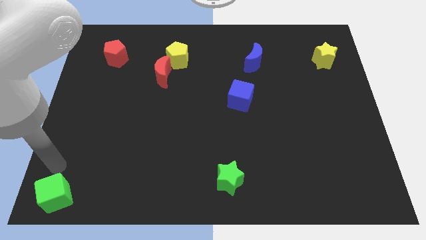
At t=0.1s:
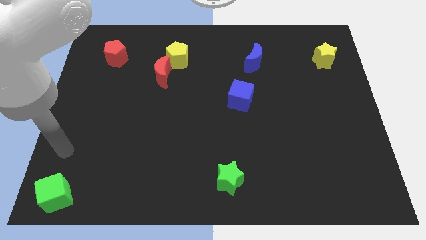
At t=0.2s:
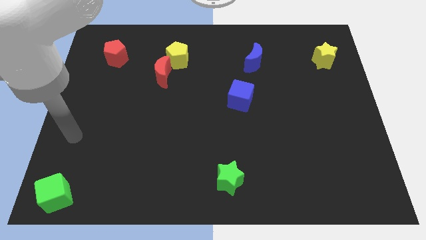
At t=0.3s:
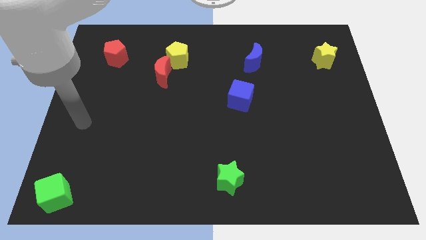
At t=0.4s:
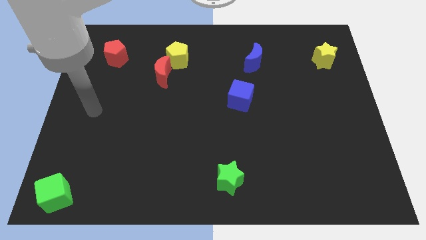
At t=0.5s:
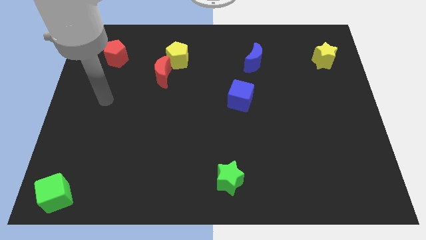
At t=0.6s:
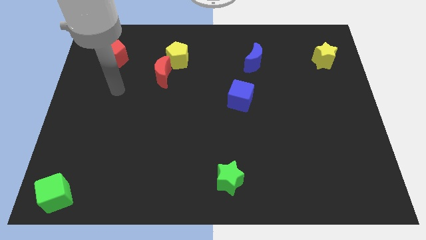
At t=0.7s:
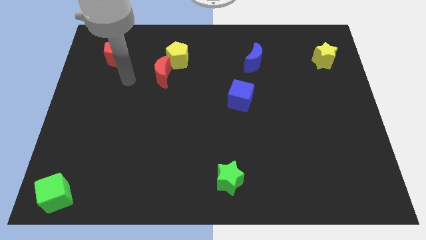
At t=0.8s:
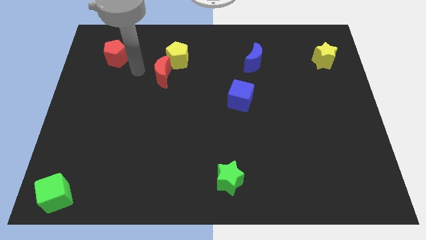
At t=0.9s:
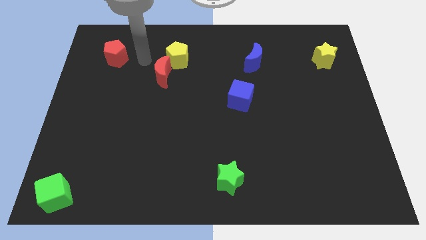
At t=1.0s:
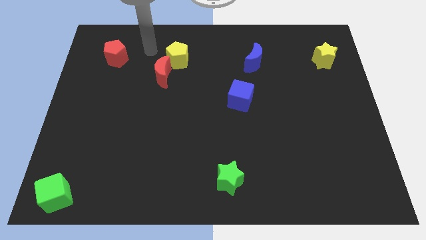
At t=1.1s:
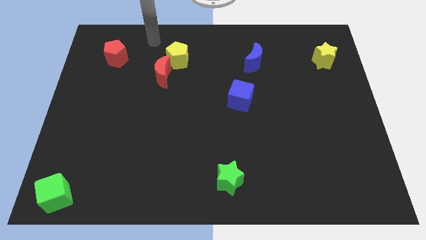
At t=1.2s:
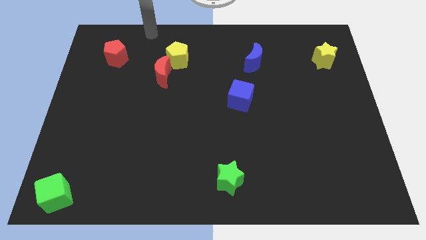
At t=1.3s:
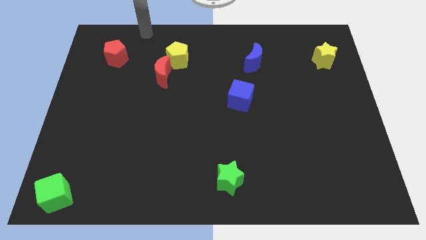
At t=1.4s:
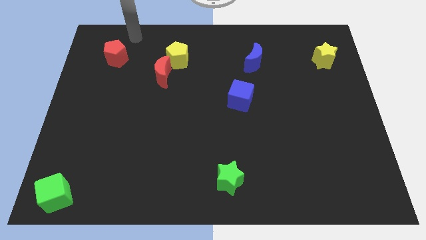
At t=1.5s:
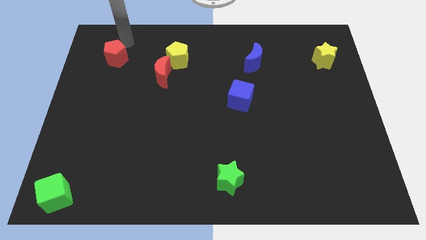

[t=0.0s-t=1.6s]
move your arm towards the top of red pentagon

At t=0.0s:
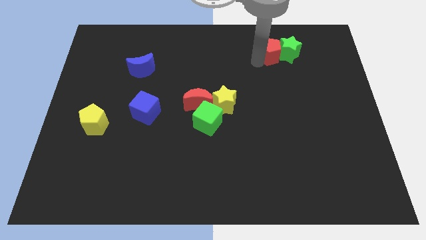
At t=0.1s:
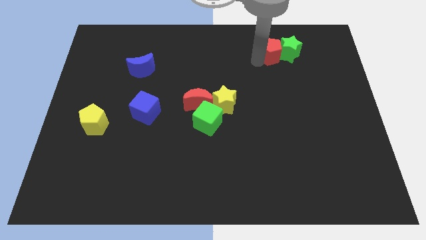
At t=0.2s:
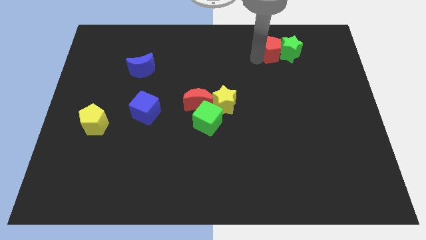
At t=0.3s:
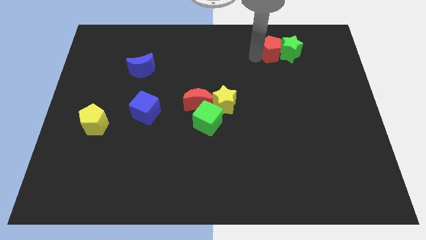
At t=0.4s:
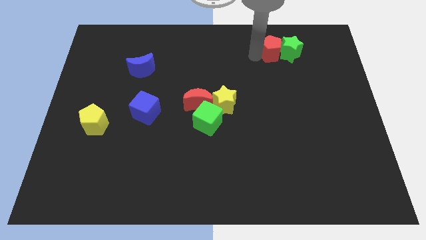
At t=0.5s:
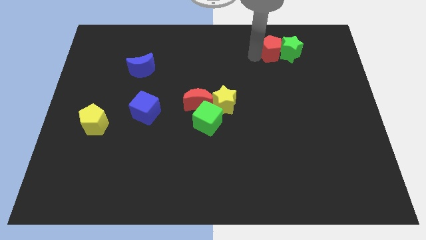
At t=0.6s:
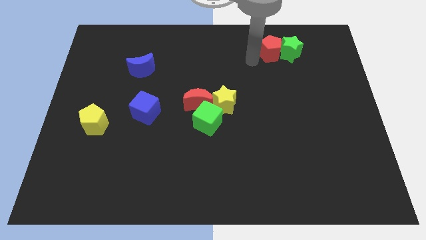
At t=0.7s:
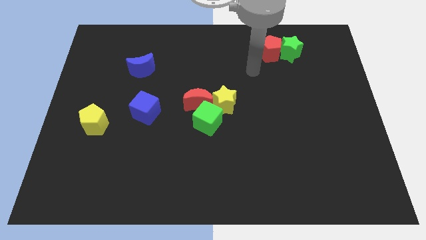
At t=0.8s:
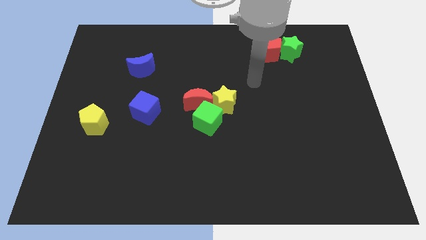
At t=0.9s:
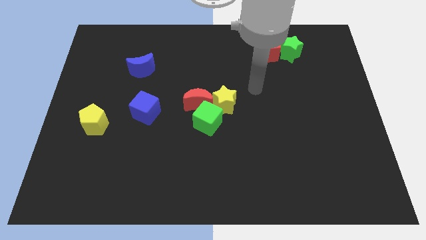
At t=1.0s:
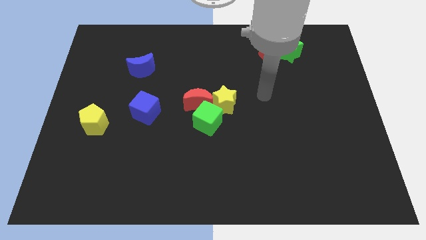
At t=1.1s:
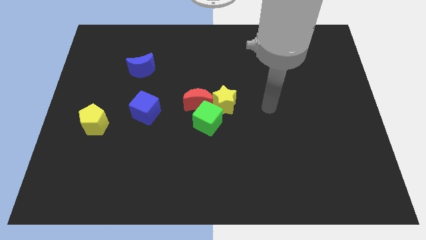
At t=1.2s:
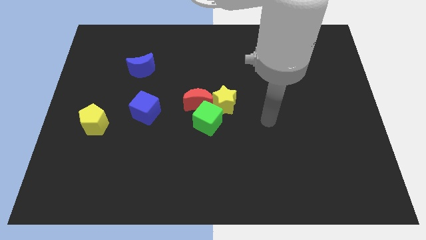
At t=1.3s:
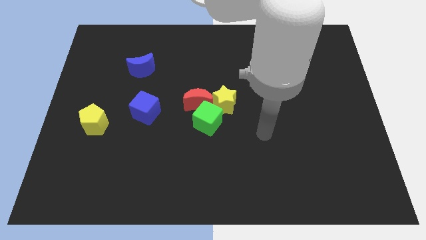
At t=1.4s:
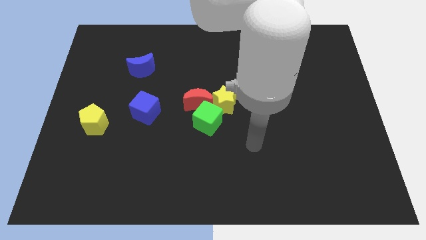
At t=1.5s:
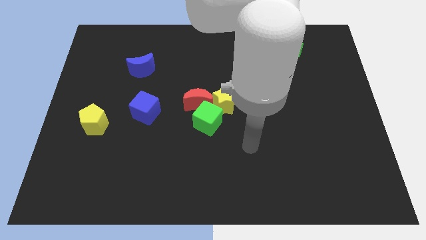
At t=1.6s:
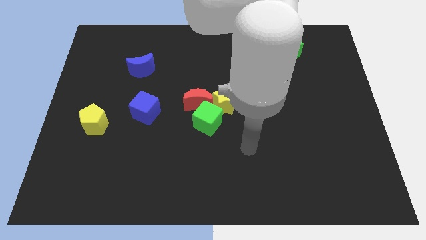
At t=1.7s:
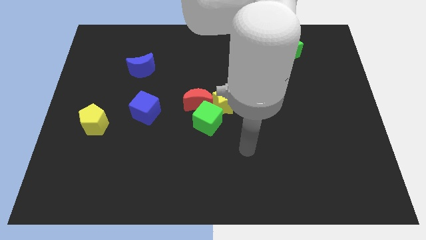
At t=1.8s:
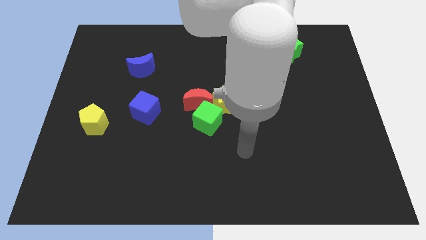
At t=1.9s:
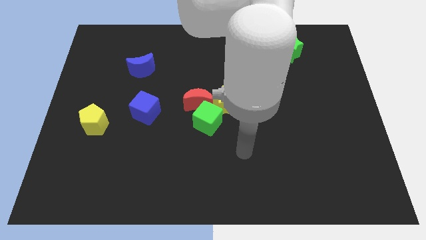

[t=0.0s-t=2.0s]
move the arm away from the red pentagon

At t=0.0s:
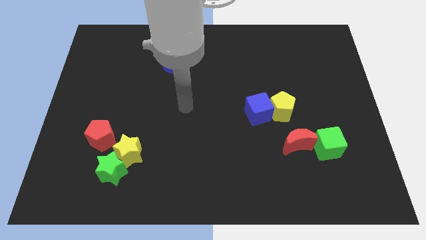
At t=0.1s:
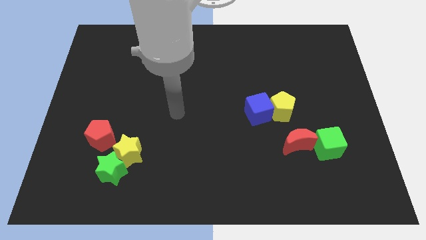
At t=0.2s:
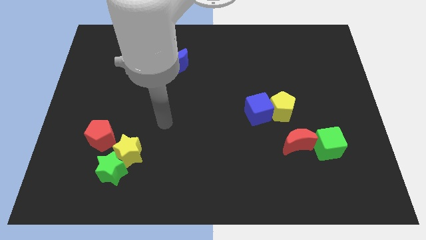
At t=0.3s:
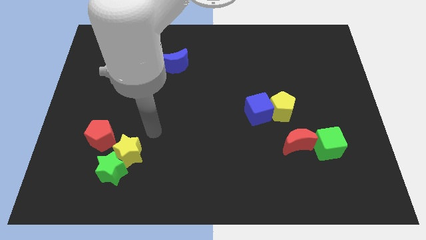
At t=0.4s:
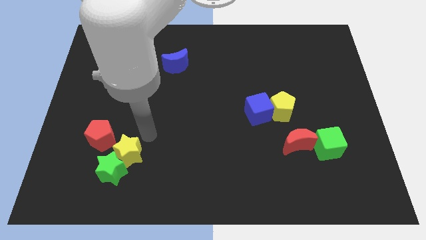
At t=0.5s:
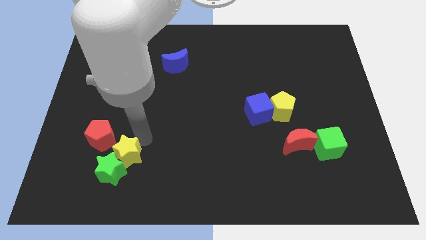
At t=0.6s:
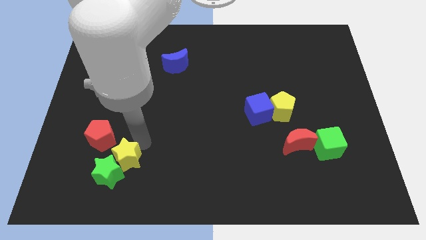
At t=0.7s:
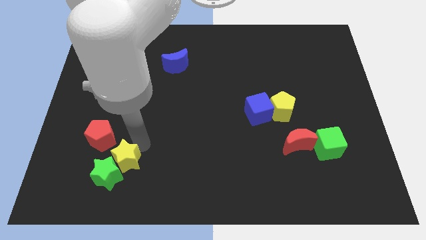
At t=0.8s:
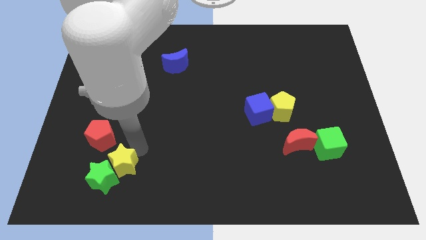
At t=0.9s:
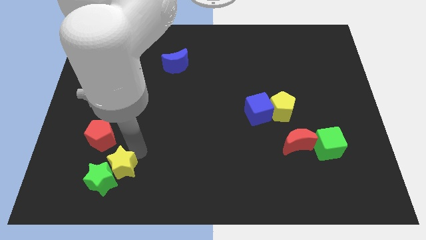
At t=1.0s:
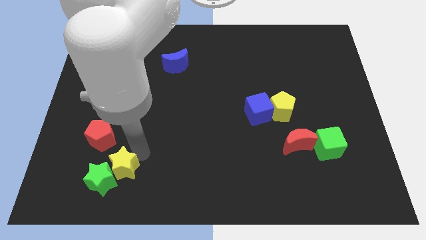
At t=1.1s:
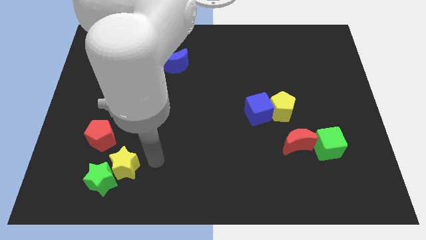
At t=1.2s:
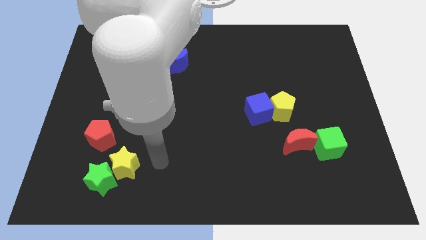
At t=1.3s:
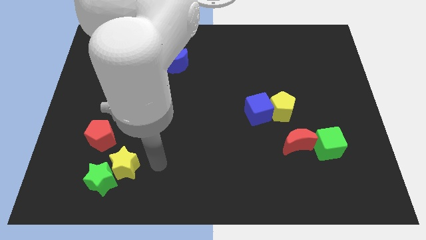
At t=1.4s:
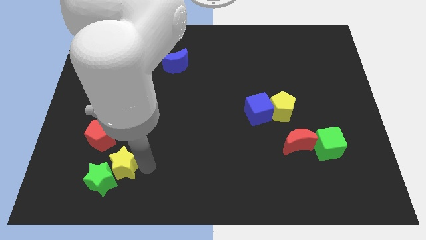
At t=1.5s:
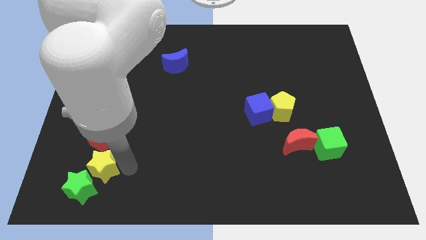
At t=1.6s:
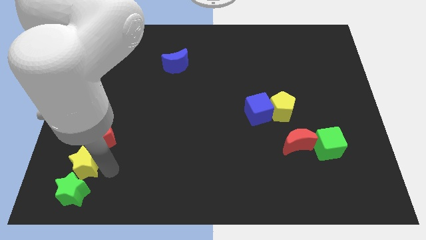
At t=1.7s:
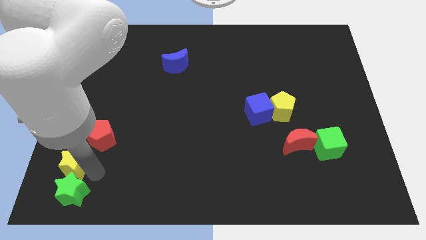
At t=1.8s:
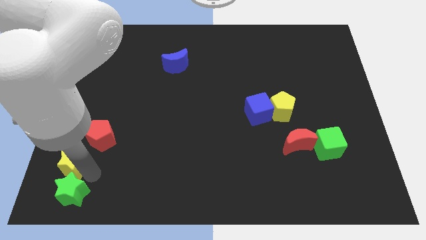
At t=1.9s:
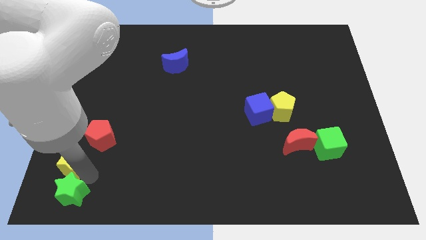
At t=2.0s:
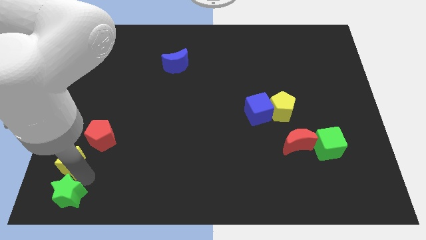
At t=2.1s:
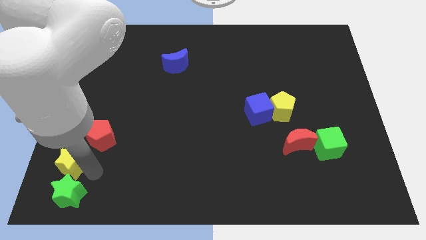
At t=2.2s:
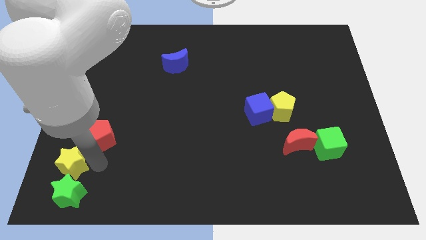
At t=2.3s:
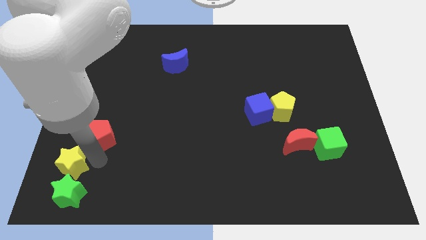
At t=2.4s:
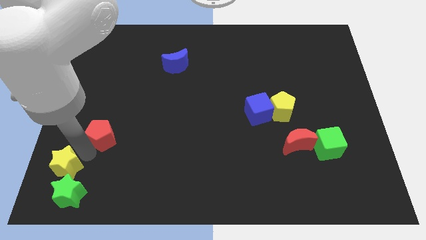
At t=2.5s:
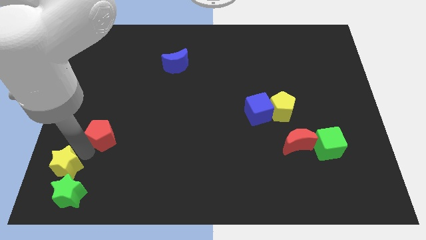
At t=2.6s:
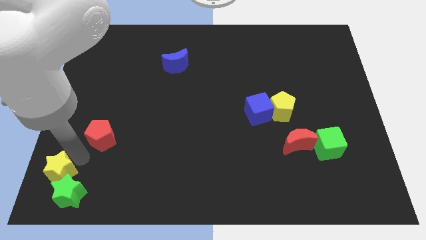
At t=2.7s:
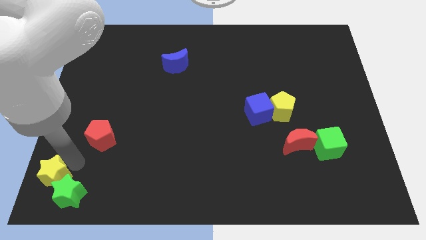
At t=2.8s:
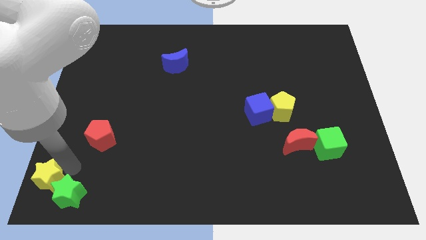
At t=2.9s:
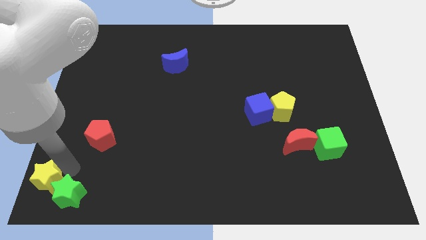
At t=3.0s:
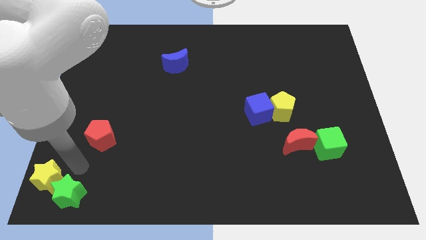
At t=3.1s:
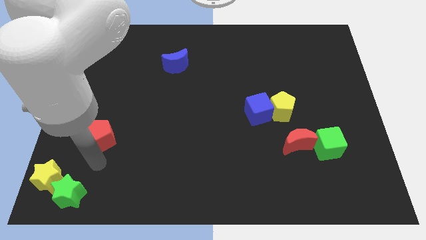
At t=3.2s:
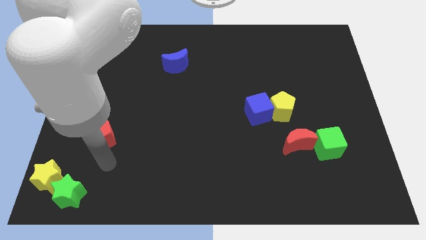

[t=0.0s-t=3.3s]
place a yellow star to the bottom left corner of the board

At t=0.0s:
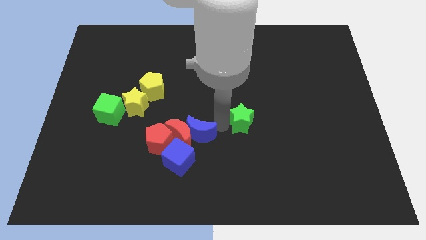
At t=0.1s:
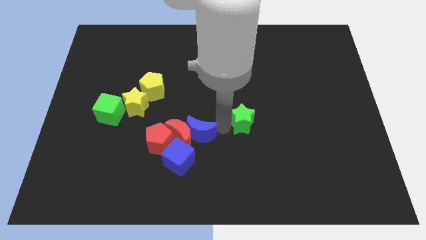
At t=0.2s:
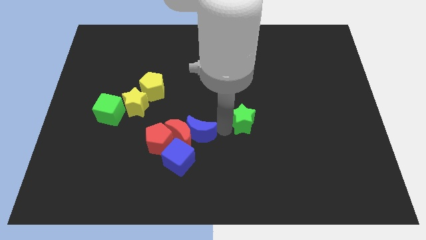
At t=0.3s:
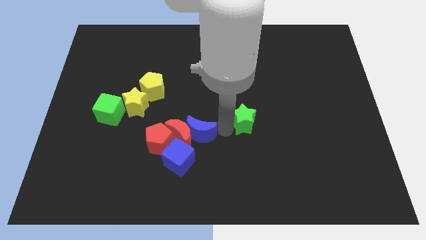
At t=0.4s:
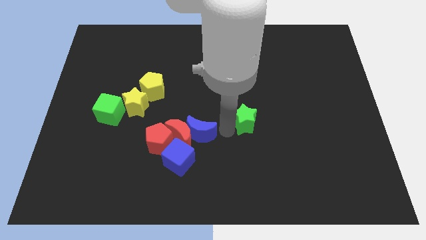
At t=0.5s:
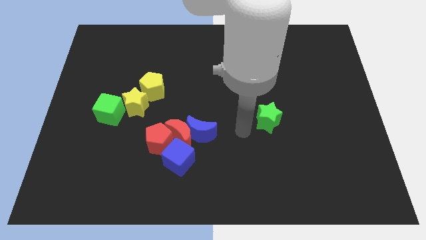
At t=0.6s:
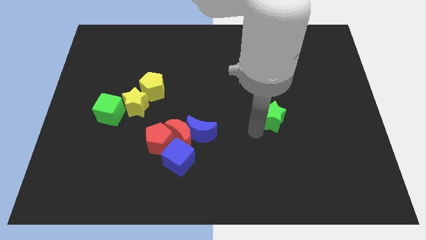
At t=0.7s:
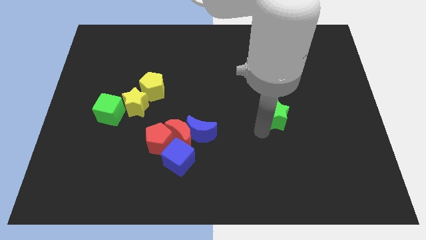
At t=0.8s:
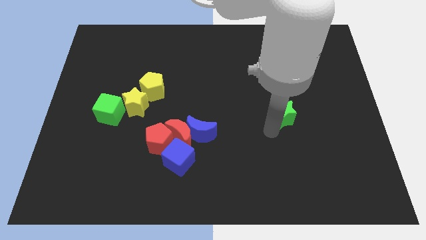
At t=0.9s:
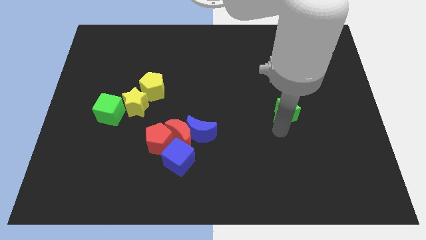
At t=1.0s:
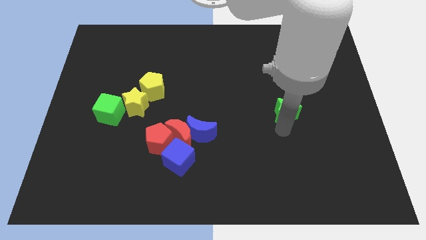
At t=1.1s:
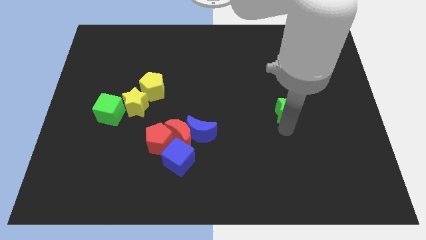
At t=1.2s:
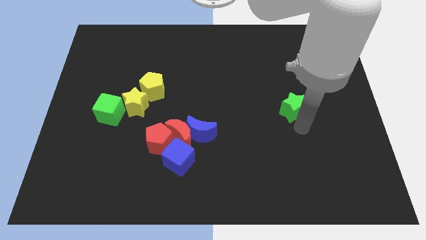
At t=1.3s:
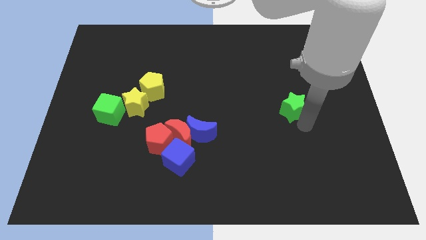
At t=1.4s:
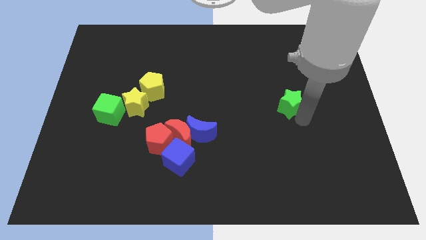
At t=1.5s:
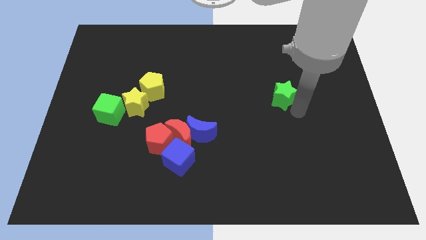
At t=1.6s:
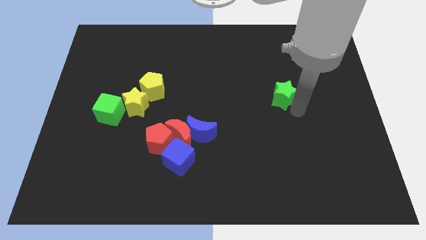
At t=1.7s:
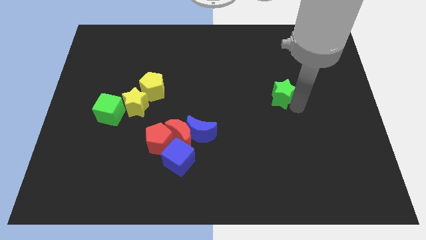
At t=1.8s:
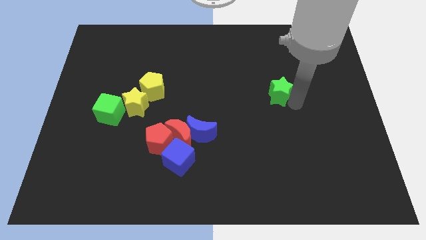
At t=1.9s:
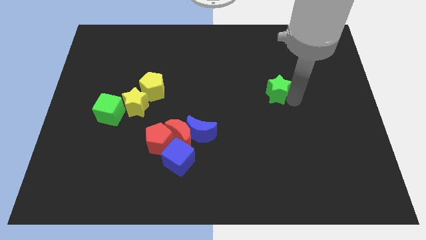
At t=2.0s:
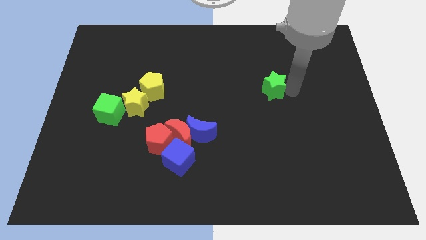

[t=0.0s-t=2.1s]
push the green star towards the right parallel to the yellow pentagon

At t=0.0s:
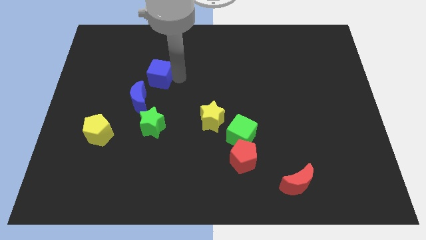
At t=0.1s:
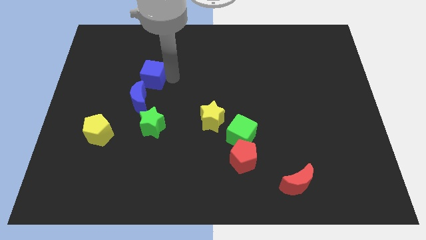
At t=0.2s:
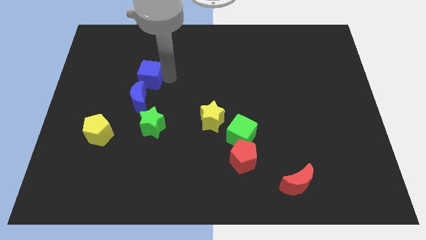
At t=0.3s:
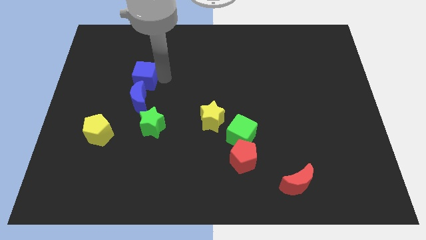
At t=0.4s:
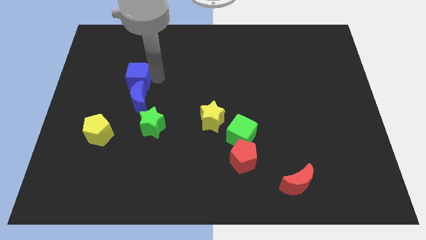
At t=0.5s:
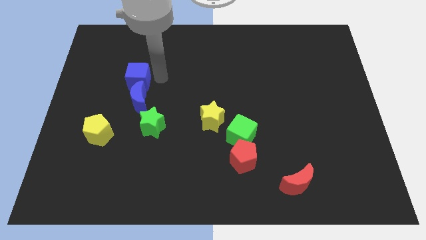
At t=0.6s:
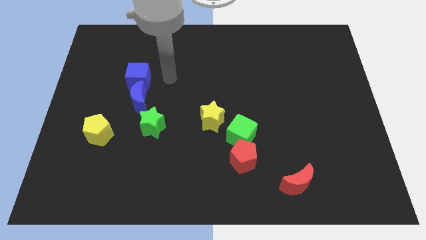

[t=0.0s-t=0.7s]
push the blue cube into the blue crescent
